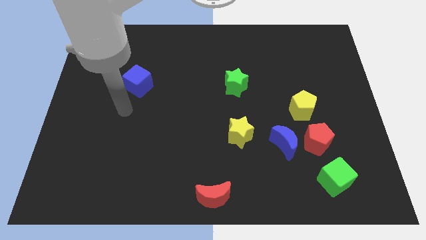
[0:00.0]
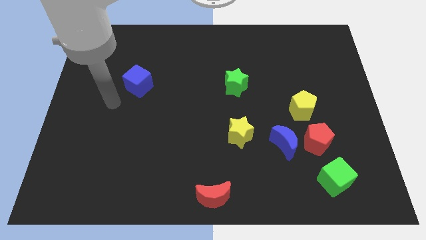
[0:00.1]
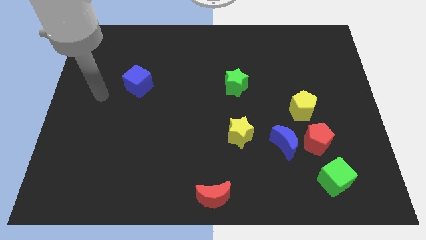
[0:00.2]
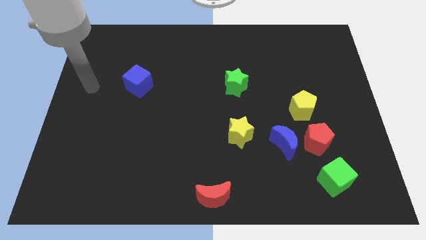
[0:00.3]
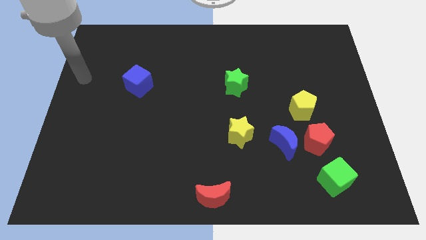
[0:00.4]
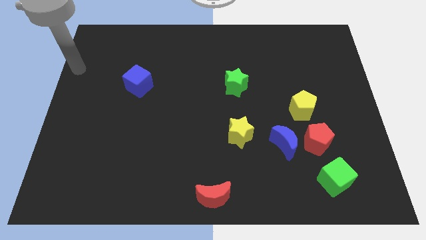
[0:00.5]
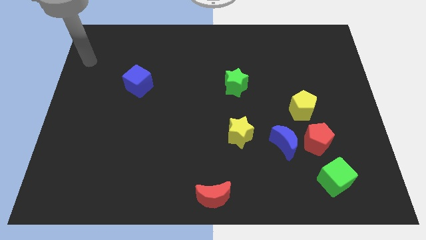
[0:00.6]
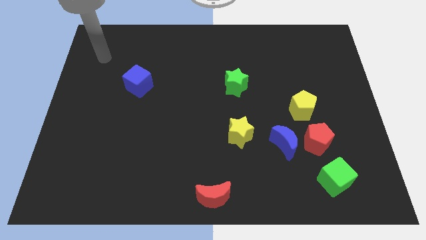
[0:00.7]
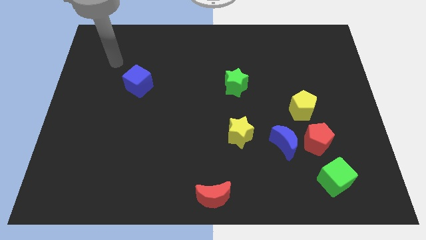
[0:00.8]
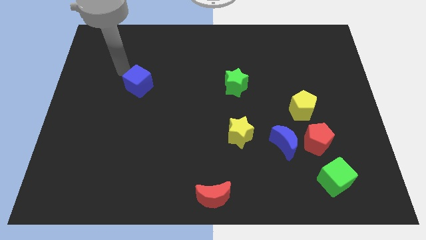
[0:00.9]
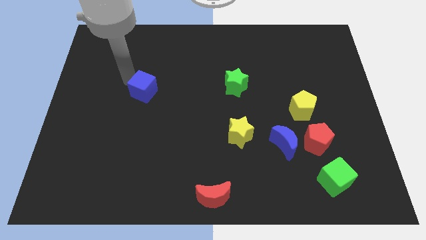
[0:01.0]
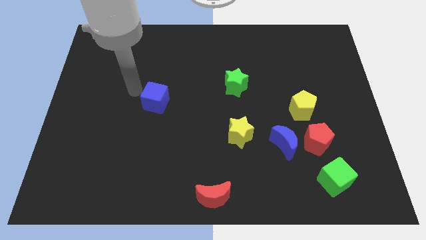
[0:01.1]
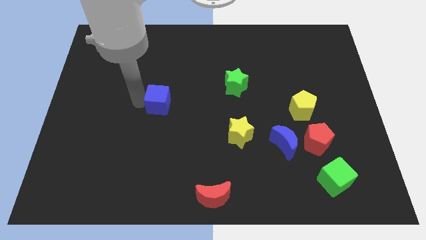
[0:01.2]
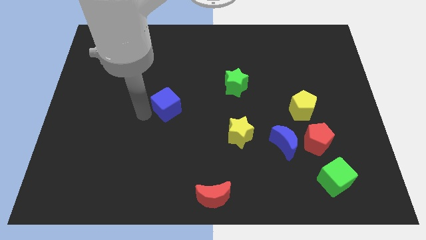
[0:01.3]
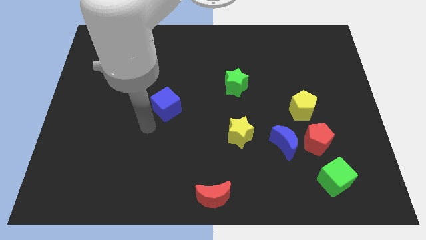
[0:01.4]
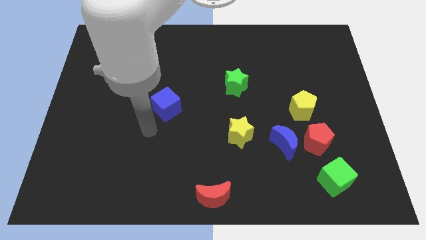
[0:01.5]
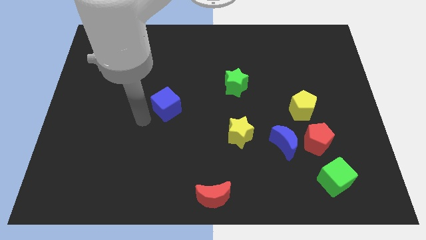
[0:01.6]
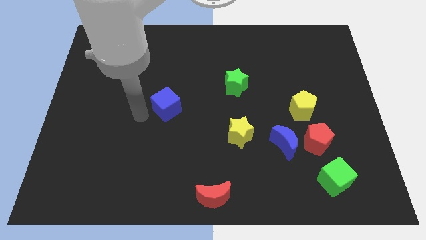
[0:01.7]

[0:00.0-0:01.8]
push the blue cube towards the center of board

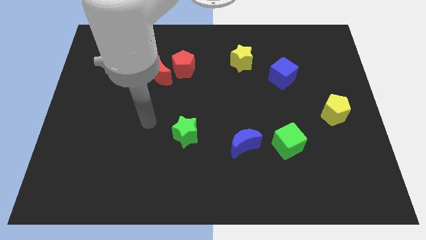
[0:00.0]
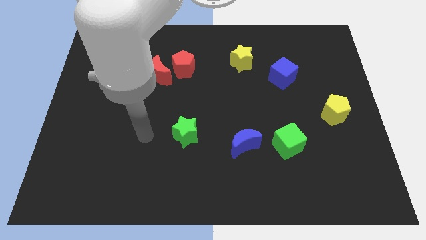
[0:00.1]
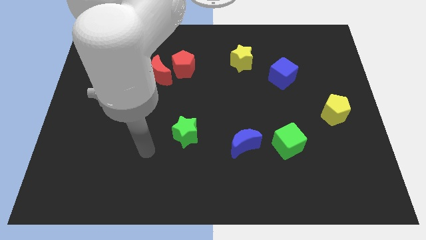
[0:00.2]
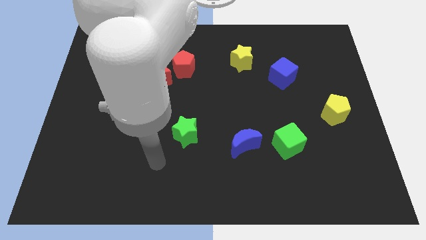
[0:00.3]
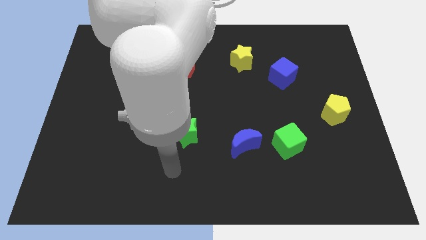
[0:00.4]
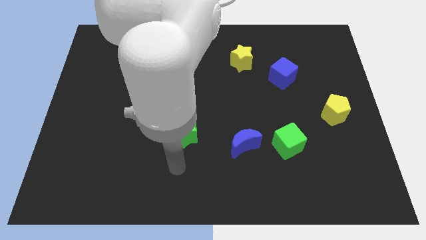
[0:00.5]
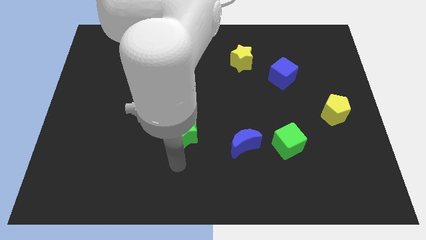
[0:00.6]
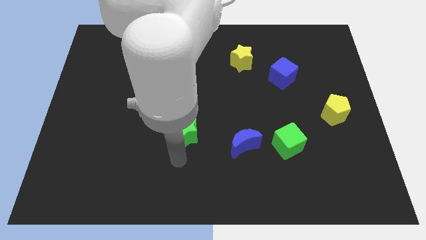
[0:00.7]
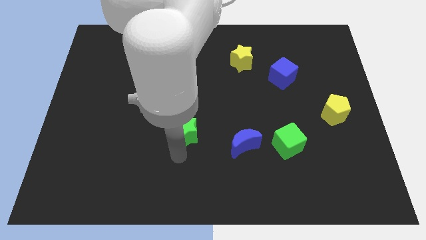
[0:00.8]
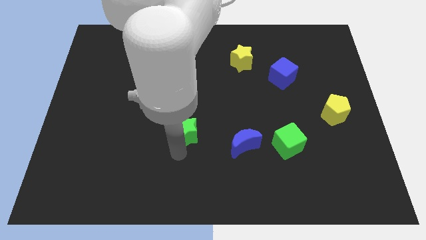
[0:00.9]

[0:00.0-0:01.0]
place the arm down to the green star

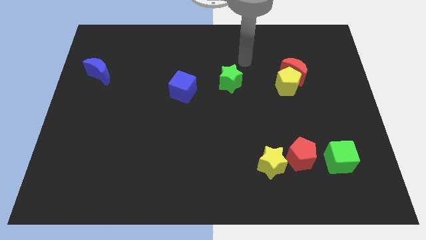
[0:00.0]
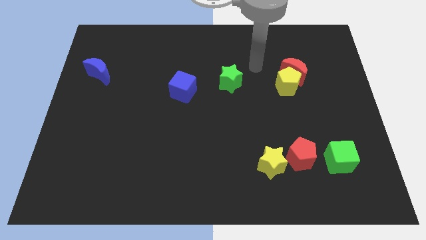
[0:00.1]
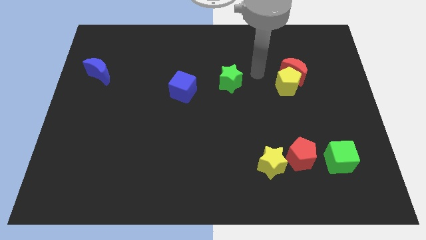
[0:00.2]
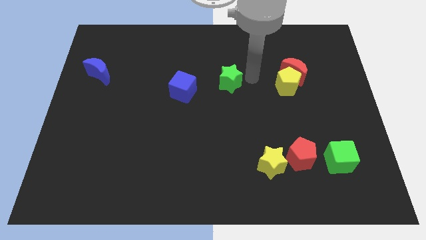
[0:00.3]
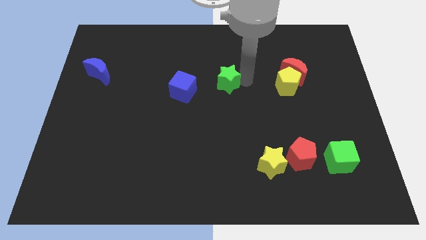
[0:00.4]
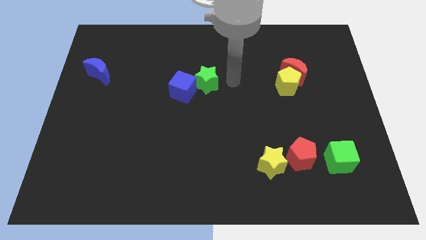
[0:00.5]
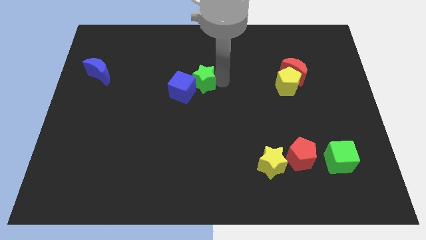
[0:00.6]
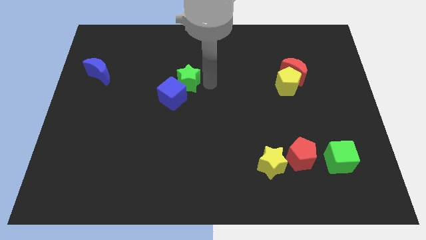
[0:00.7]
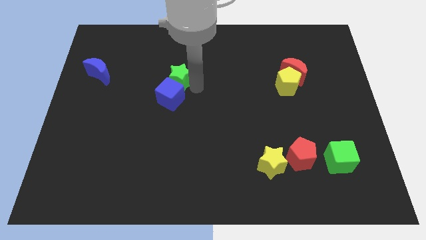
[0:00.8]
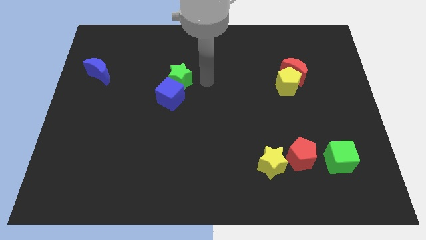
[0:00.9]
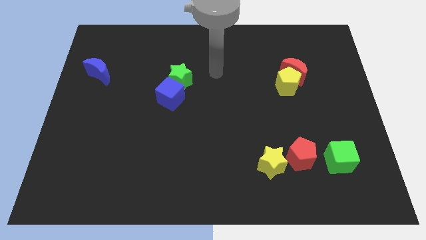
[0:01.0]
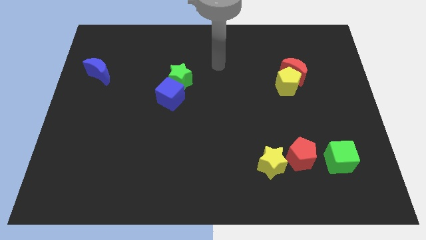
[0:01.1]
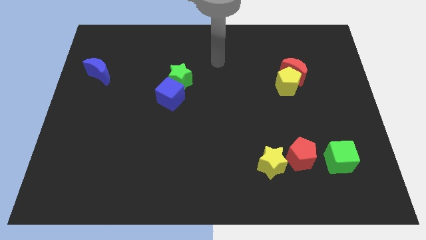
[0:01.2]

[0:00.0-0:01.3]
push the green star into the blue cube

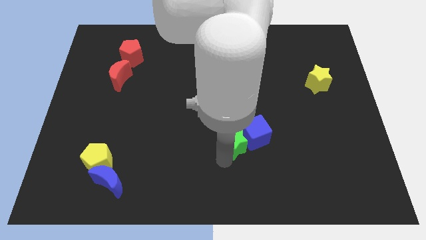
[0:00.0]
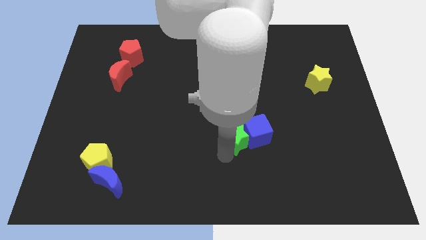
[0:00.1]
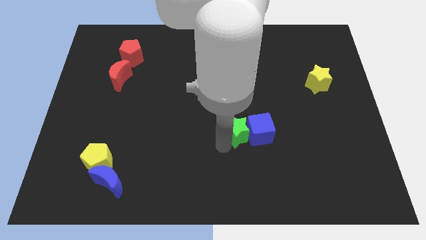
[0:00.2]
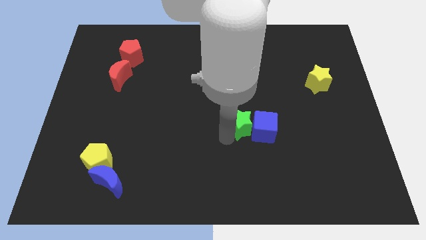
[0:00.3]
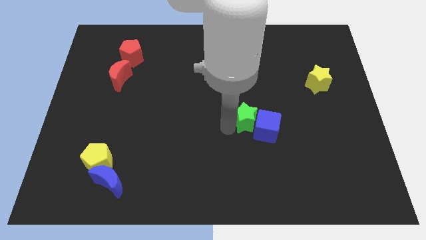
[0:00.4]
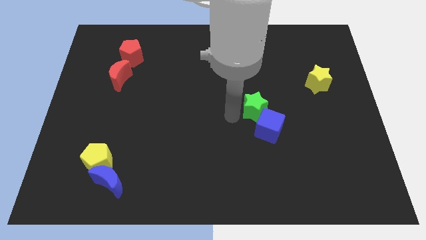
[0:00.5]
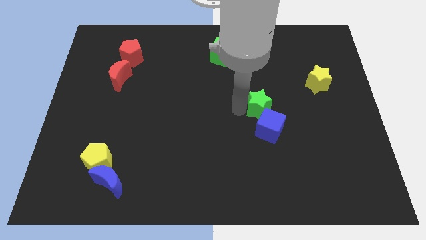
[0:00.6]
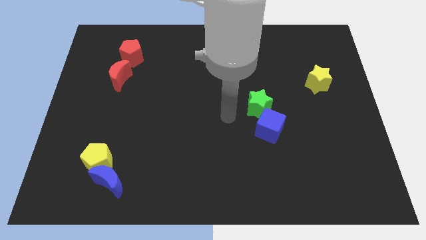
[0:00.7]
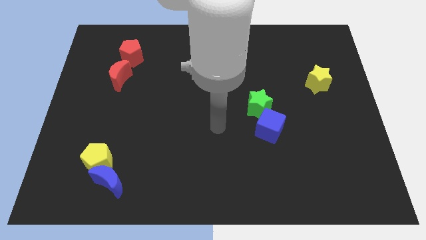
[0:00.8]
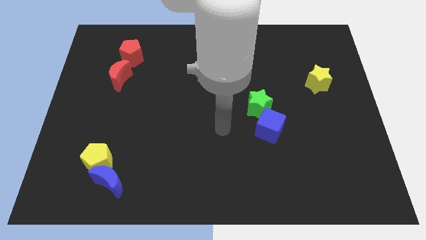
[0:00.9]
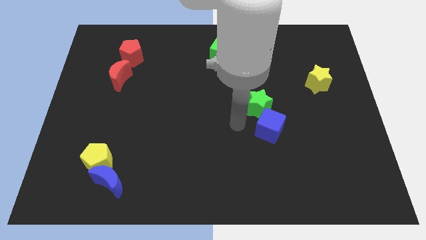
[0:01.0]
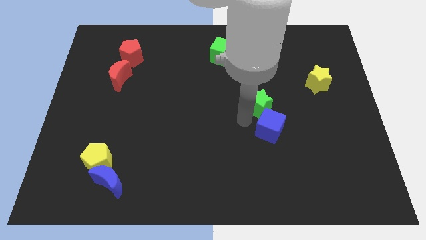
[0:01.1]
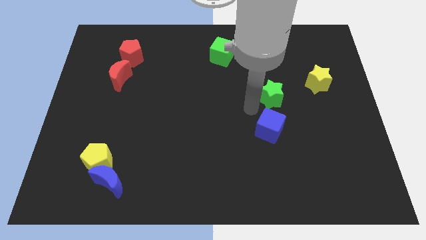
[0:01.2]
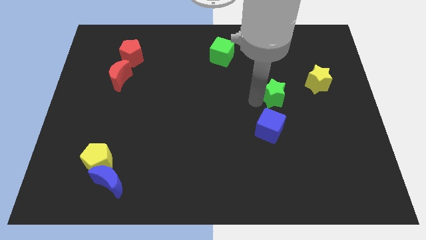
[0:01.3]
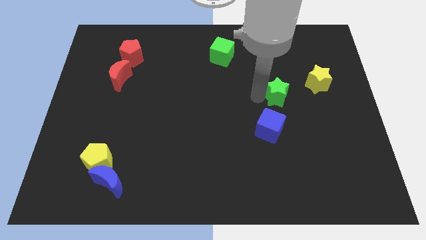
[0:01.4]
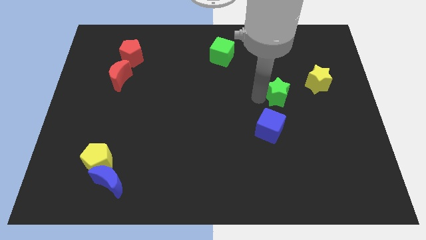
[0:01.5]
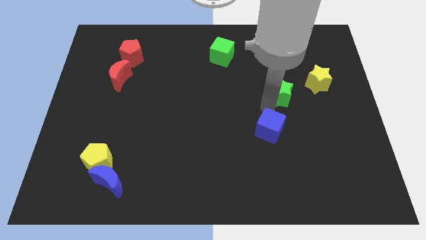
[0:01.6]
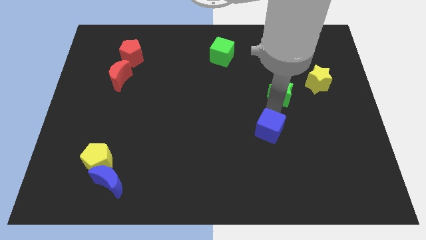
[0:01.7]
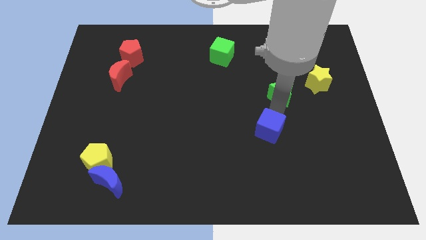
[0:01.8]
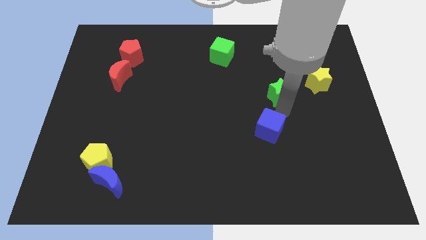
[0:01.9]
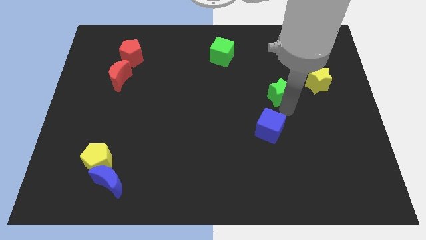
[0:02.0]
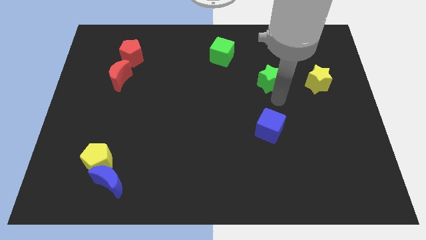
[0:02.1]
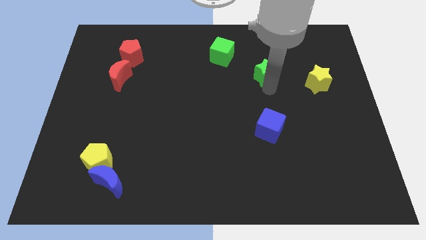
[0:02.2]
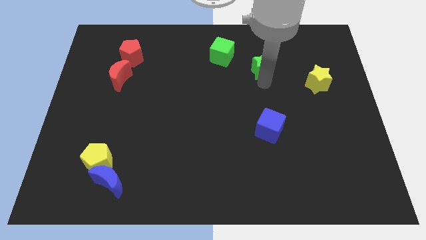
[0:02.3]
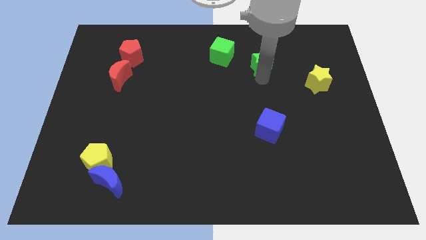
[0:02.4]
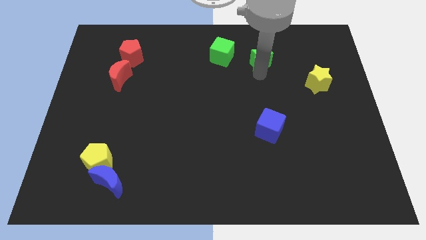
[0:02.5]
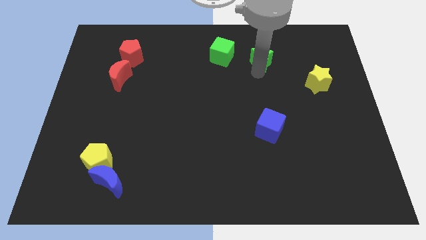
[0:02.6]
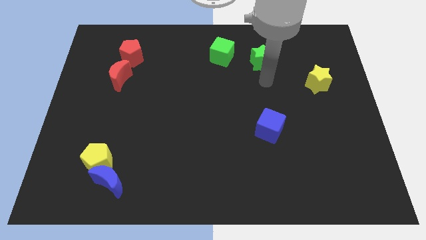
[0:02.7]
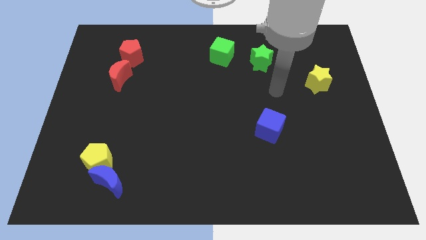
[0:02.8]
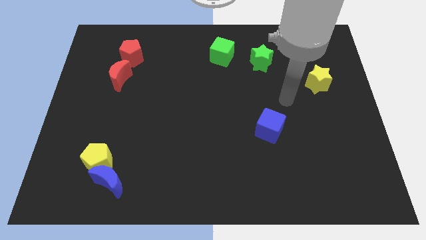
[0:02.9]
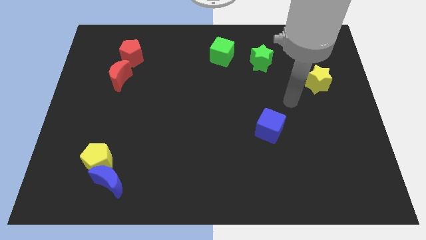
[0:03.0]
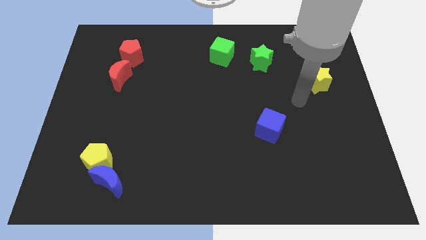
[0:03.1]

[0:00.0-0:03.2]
place the green star on the top of the blue cube vertically

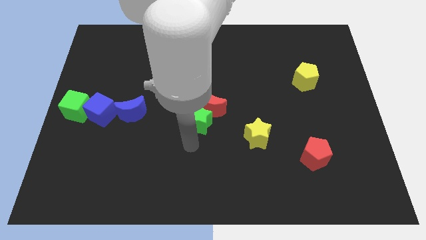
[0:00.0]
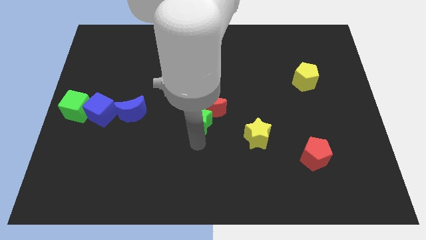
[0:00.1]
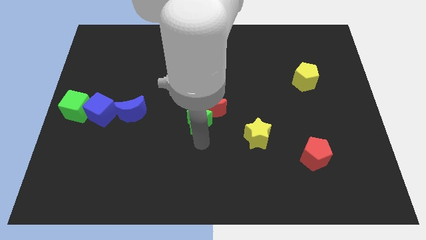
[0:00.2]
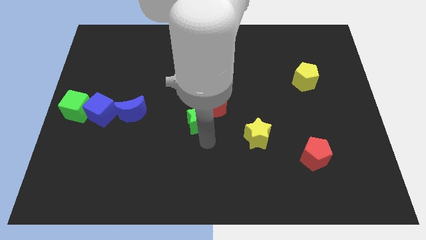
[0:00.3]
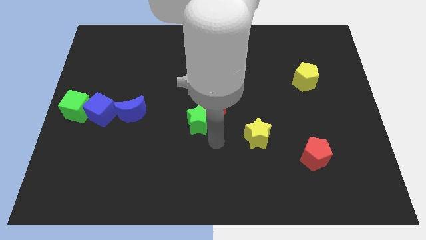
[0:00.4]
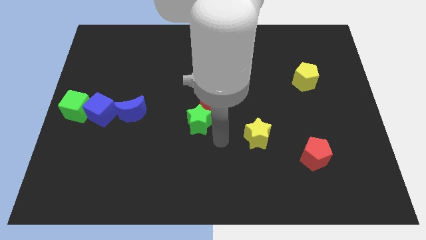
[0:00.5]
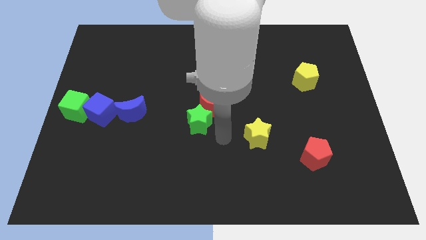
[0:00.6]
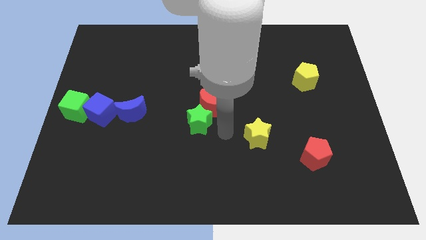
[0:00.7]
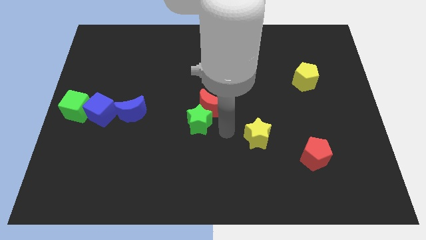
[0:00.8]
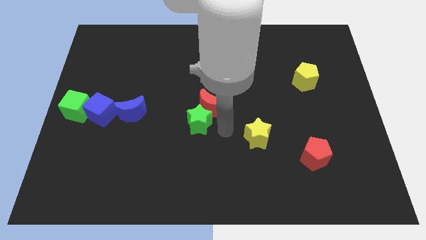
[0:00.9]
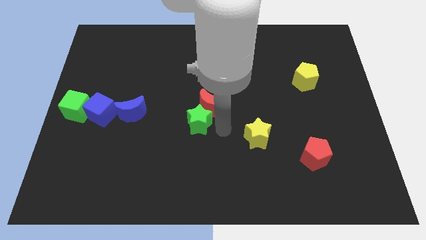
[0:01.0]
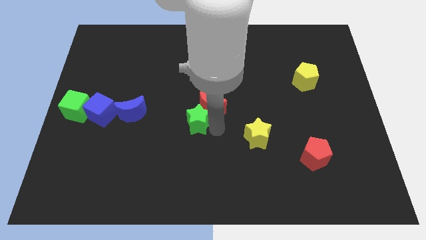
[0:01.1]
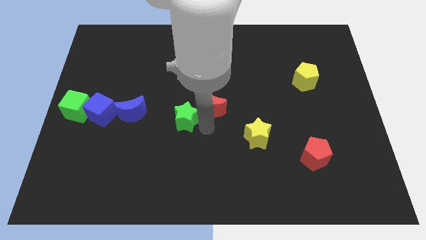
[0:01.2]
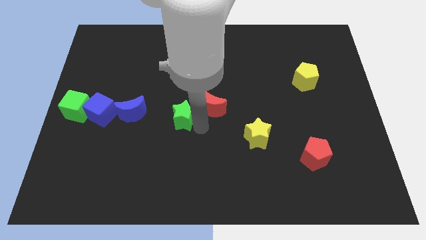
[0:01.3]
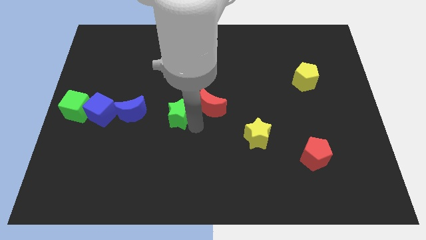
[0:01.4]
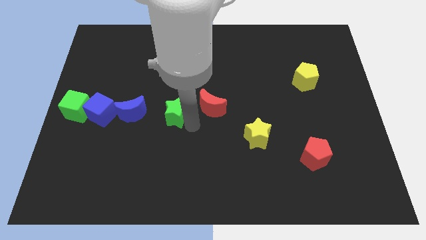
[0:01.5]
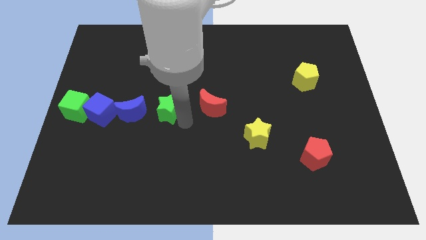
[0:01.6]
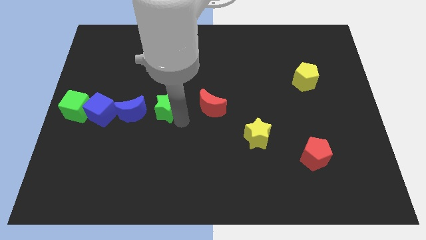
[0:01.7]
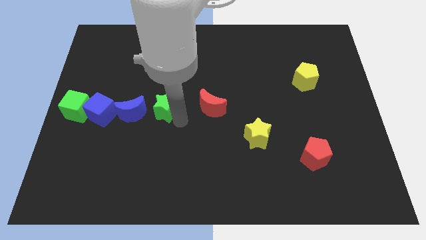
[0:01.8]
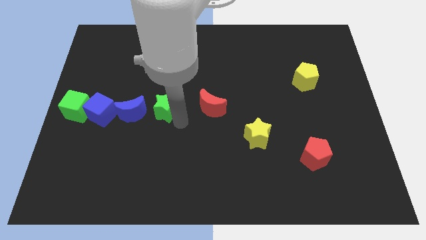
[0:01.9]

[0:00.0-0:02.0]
separate the green star from the red crescent
